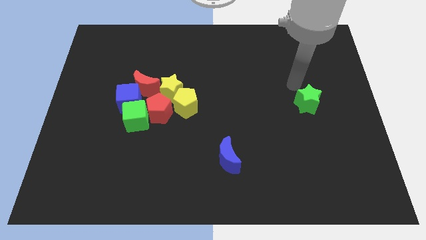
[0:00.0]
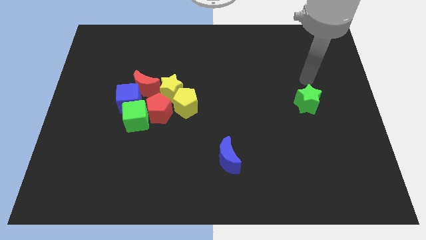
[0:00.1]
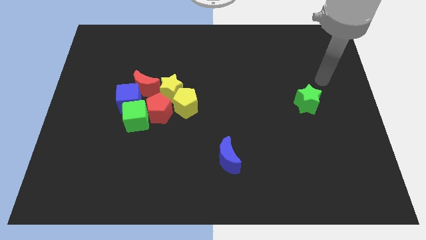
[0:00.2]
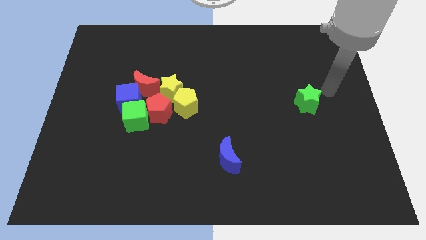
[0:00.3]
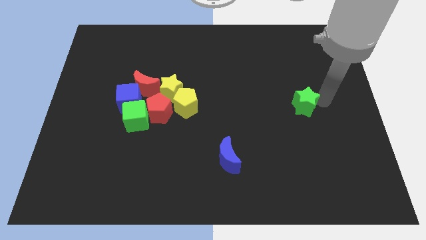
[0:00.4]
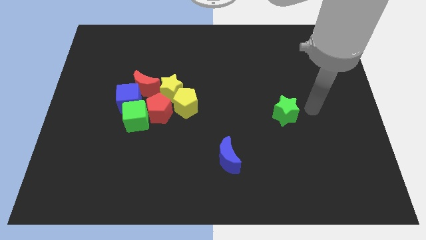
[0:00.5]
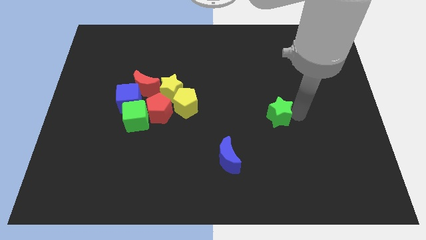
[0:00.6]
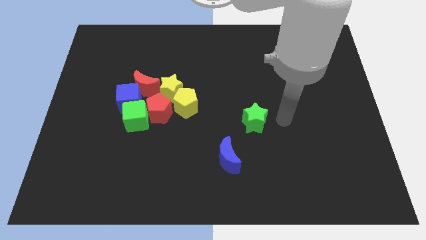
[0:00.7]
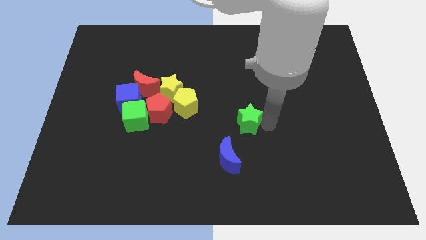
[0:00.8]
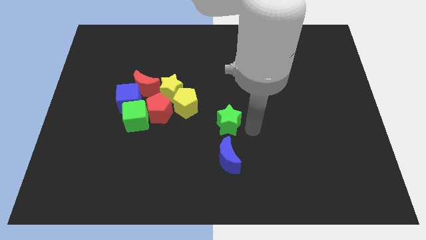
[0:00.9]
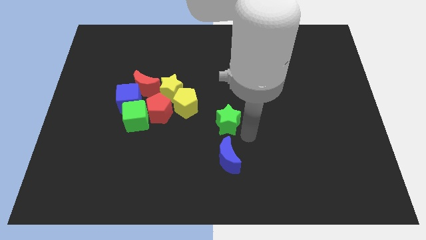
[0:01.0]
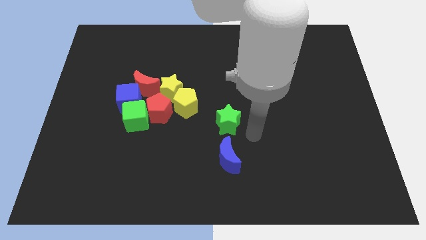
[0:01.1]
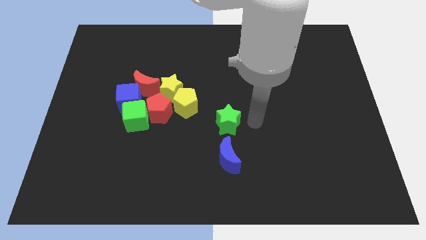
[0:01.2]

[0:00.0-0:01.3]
move the green star above the blue crescent

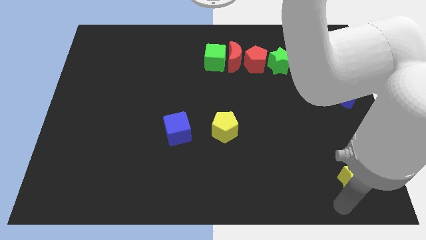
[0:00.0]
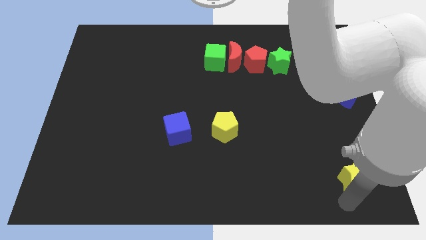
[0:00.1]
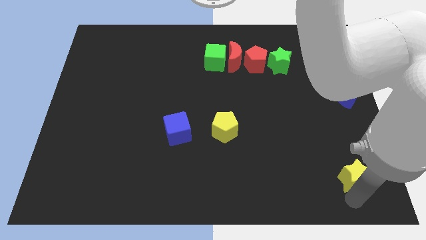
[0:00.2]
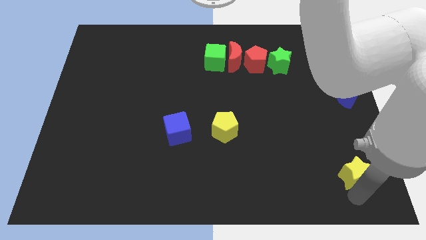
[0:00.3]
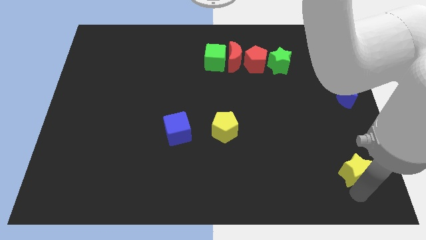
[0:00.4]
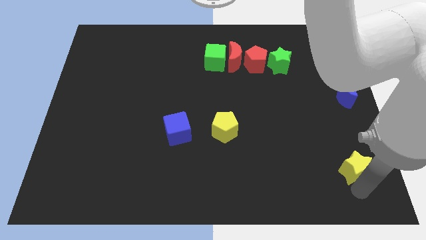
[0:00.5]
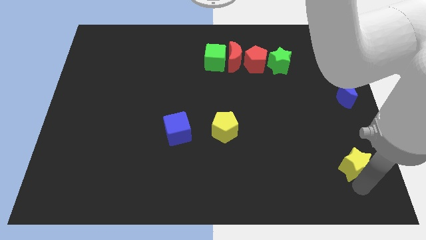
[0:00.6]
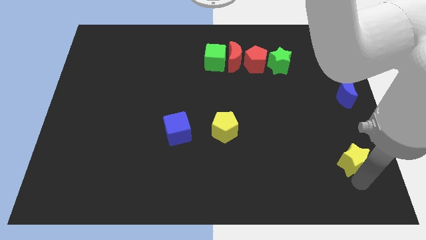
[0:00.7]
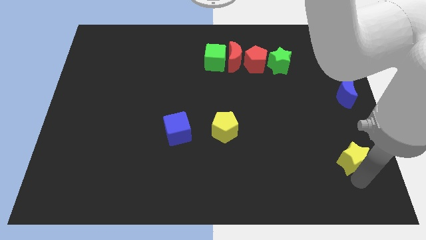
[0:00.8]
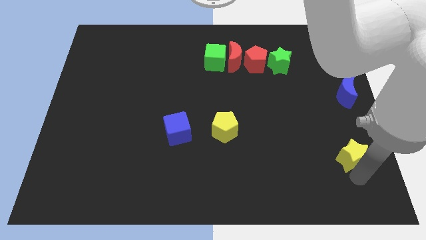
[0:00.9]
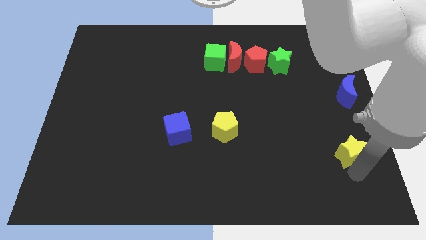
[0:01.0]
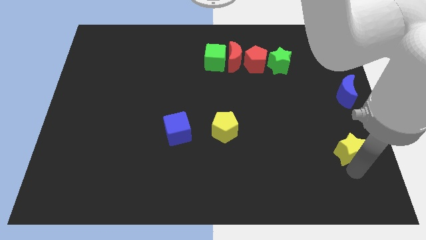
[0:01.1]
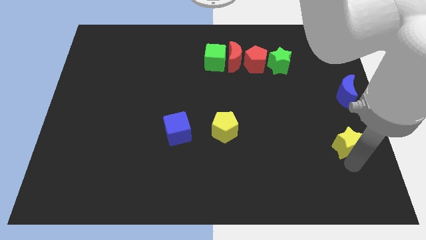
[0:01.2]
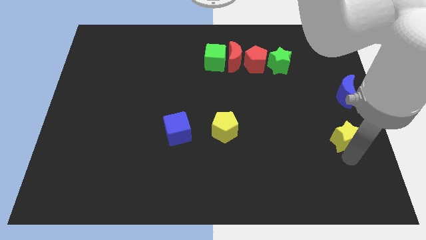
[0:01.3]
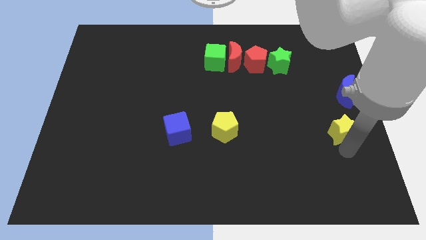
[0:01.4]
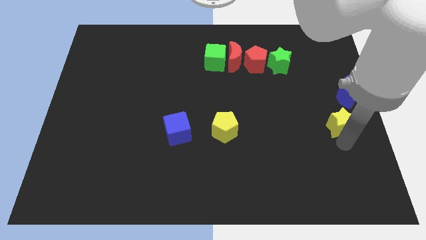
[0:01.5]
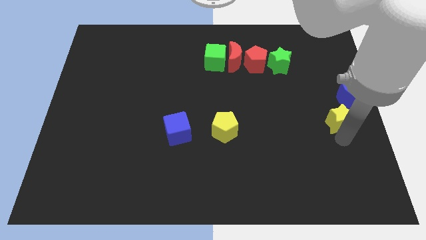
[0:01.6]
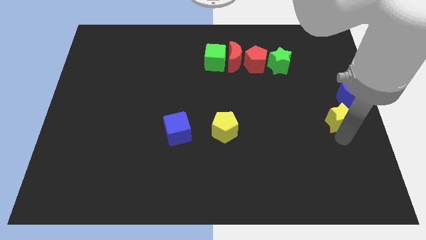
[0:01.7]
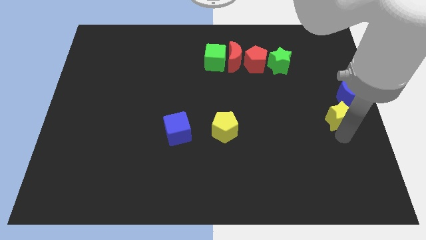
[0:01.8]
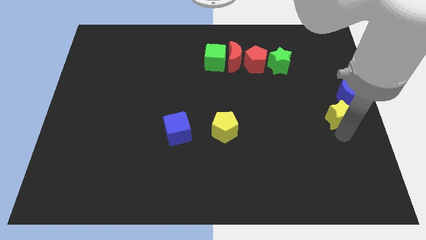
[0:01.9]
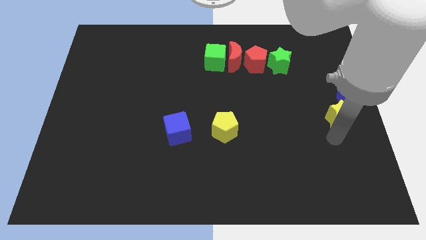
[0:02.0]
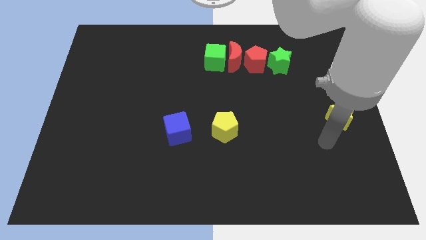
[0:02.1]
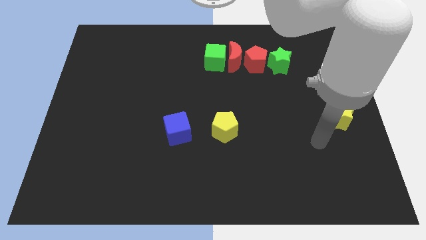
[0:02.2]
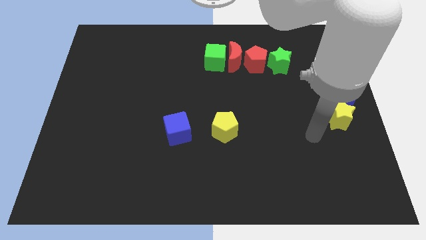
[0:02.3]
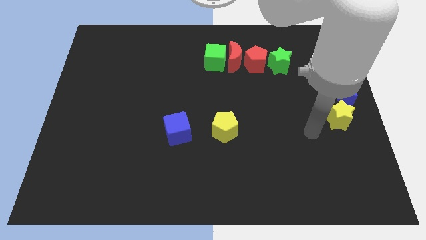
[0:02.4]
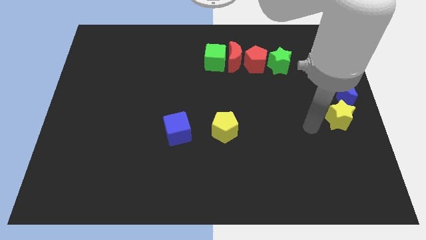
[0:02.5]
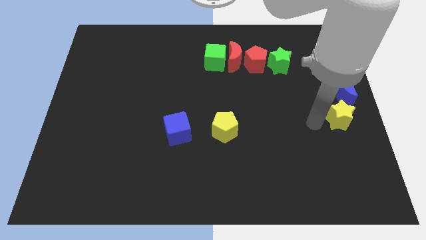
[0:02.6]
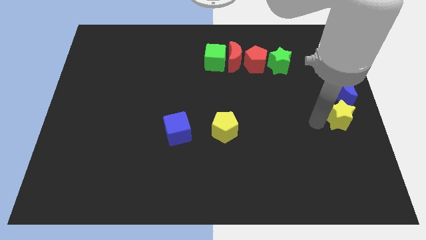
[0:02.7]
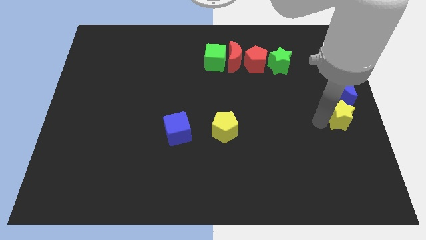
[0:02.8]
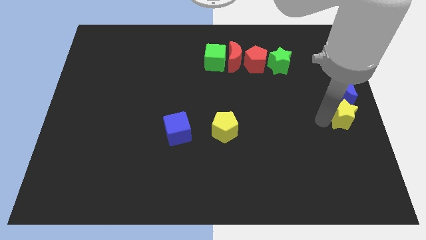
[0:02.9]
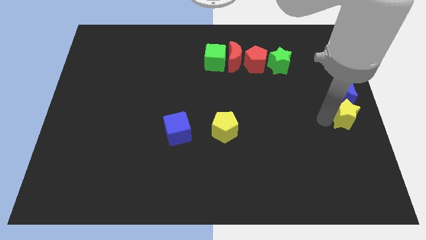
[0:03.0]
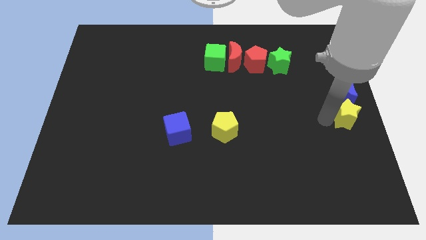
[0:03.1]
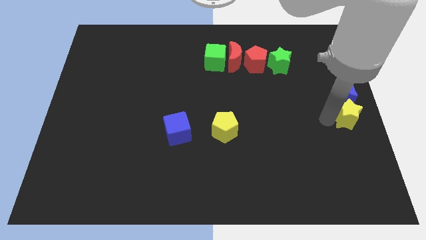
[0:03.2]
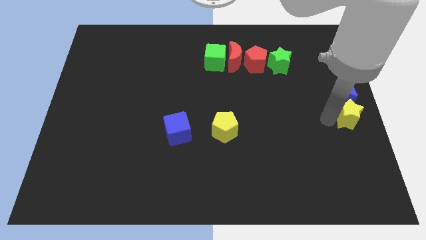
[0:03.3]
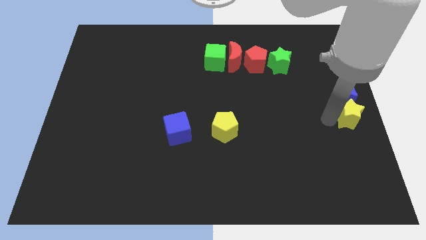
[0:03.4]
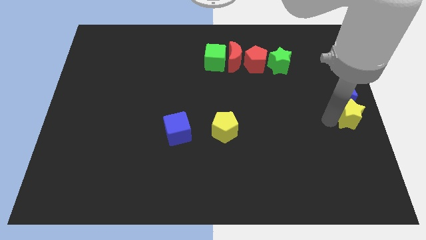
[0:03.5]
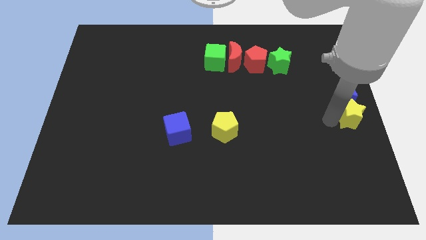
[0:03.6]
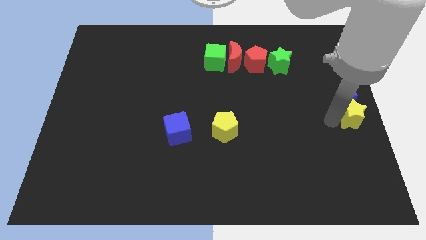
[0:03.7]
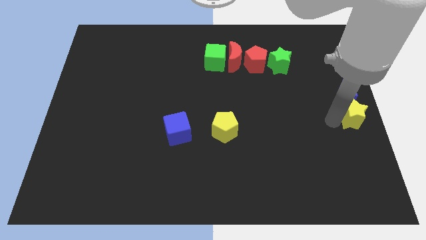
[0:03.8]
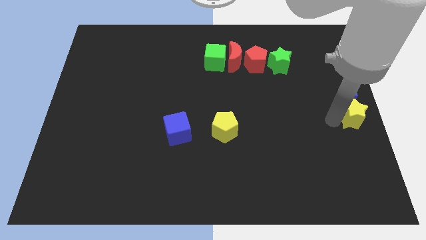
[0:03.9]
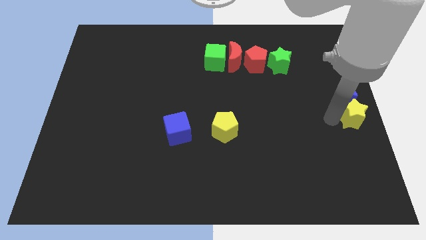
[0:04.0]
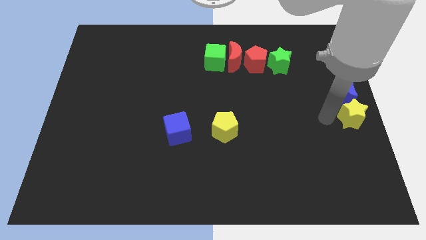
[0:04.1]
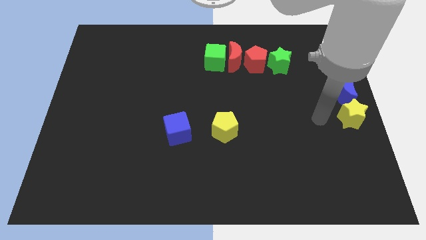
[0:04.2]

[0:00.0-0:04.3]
move the yellow star down to the blue moon

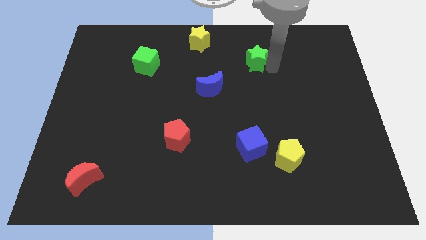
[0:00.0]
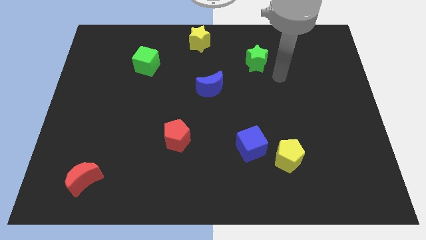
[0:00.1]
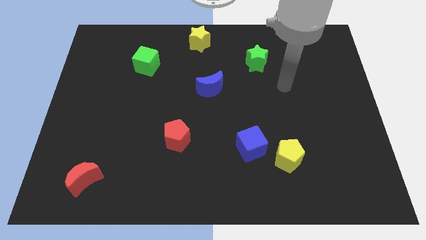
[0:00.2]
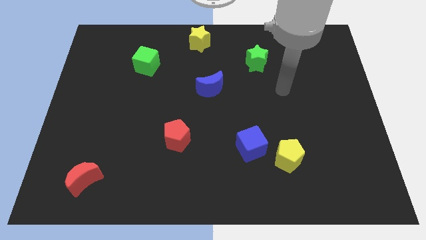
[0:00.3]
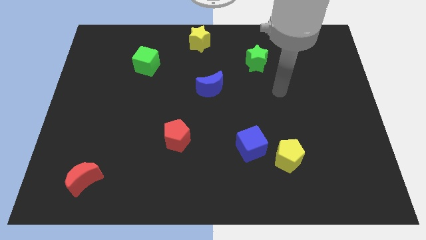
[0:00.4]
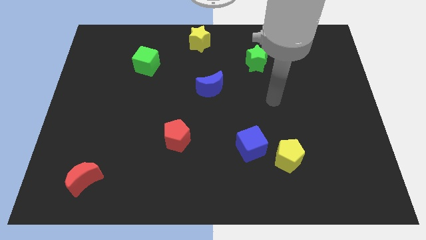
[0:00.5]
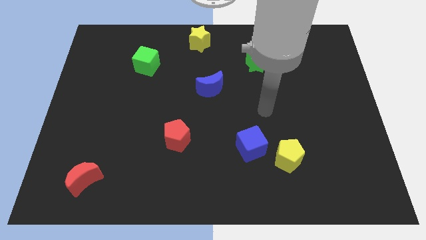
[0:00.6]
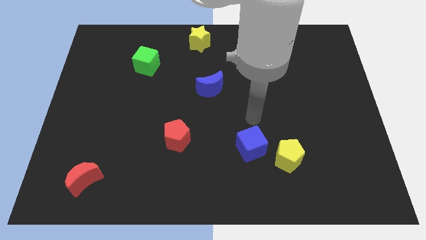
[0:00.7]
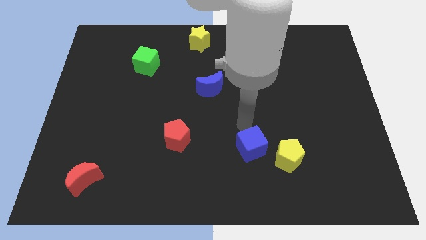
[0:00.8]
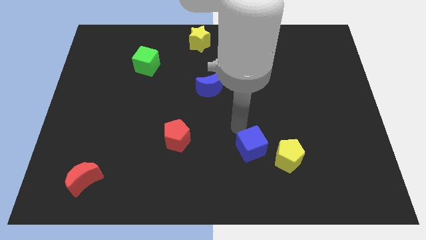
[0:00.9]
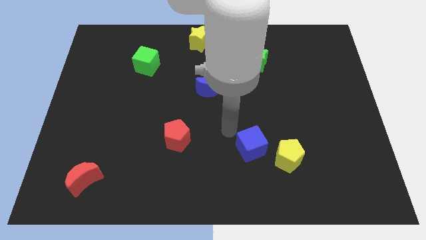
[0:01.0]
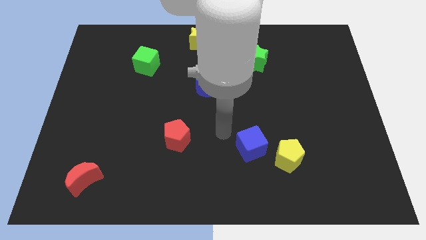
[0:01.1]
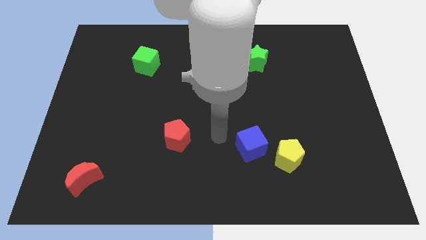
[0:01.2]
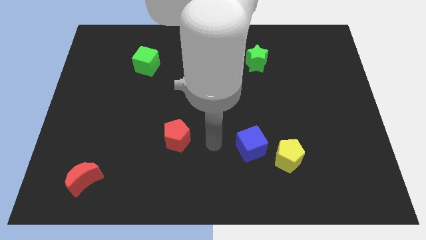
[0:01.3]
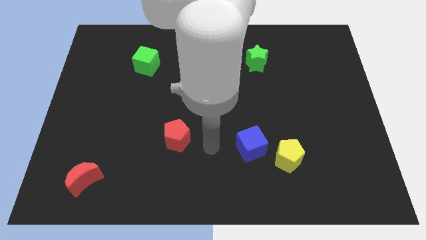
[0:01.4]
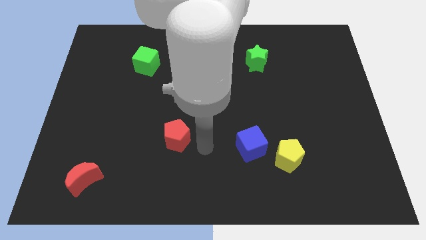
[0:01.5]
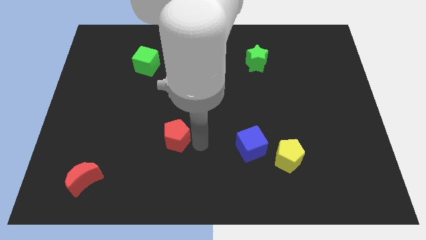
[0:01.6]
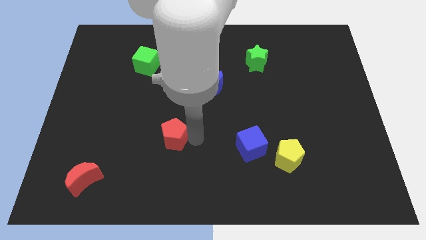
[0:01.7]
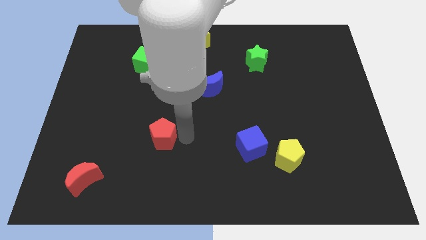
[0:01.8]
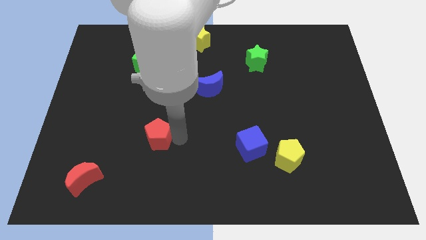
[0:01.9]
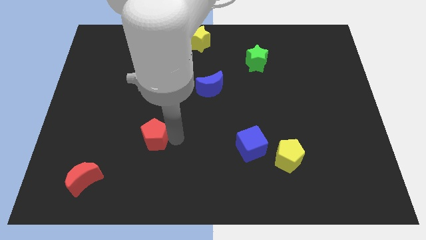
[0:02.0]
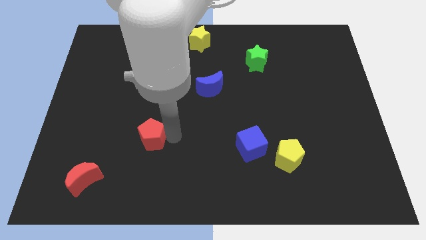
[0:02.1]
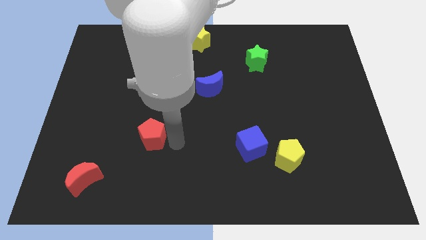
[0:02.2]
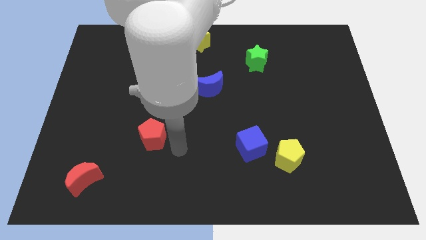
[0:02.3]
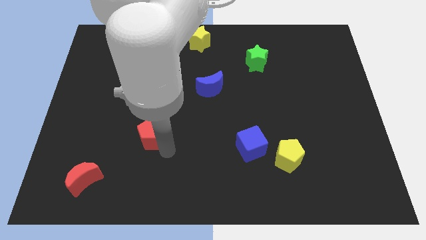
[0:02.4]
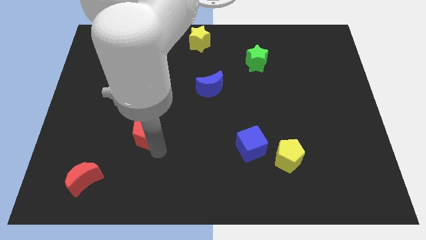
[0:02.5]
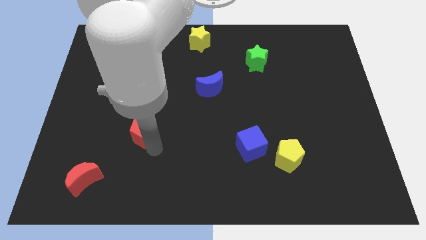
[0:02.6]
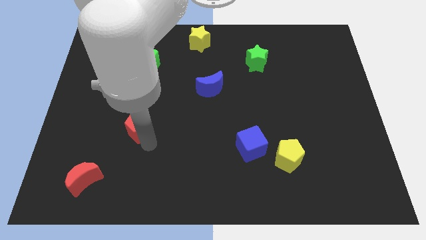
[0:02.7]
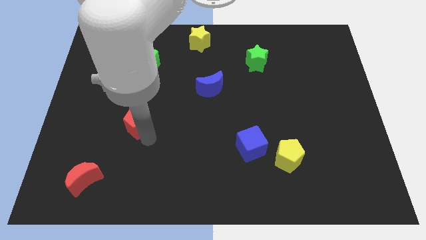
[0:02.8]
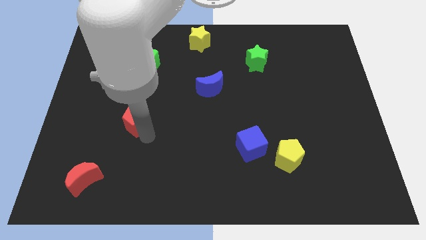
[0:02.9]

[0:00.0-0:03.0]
push the red pentagon towards the left side of the board

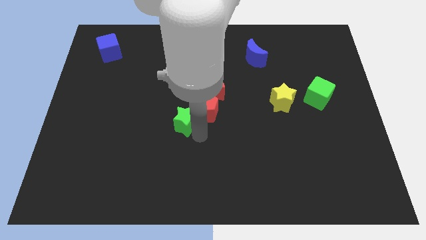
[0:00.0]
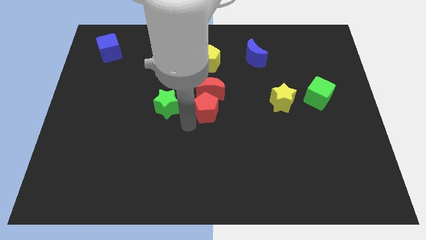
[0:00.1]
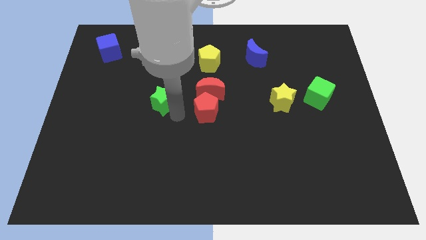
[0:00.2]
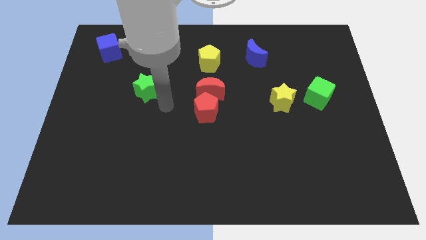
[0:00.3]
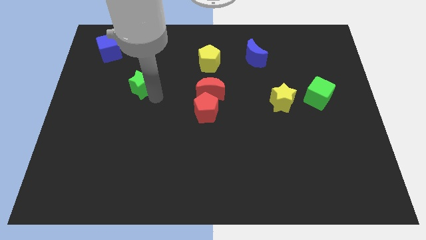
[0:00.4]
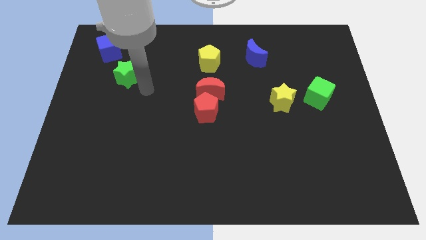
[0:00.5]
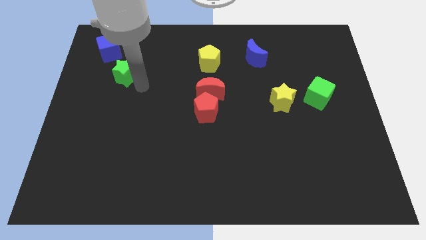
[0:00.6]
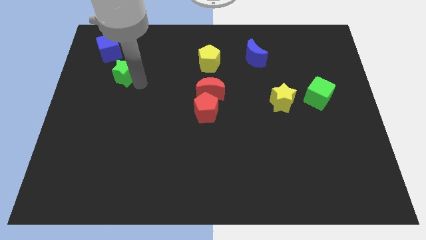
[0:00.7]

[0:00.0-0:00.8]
place the green star down to the blue cube
